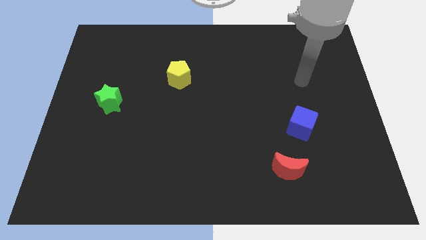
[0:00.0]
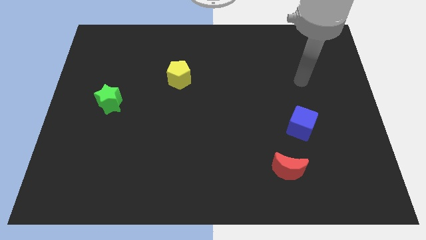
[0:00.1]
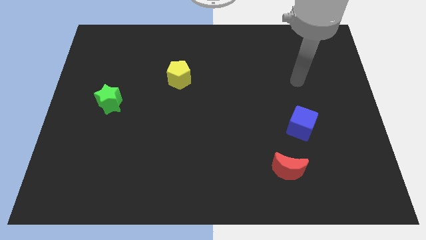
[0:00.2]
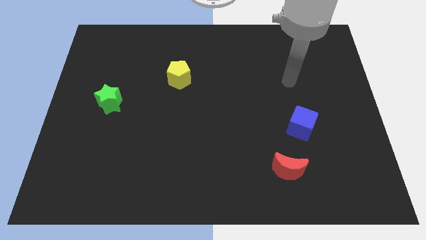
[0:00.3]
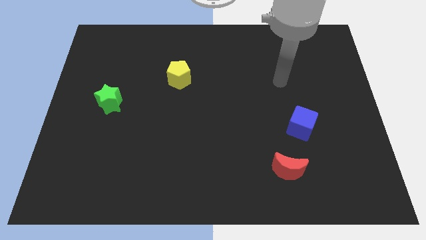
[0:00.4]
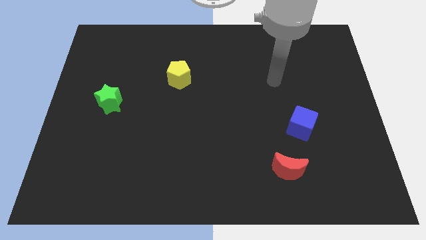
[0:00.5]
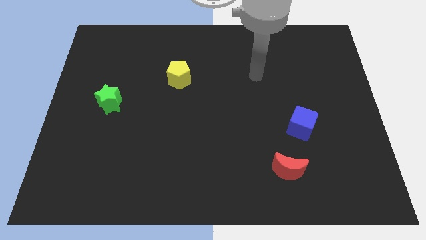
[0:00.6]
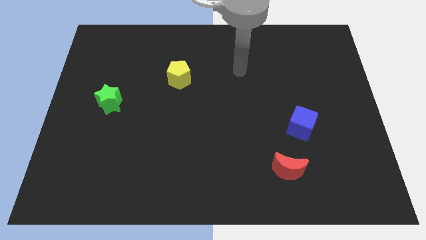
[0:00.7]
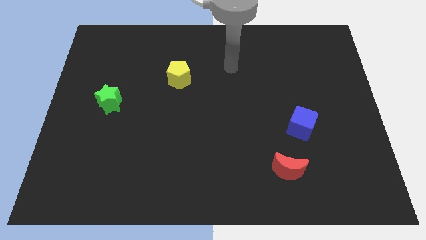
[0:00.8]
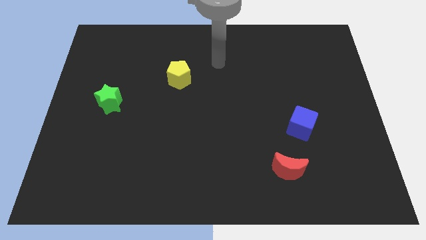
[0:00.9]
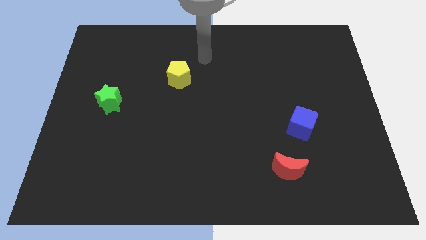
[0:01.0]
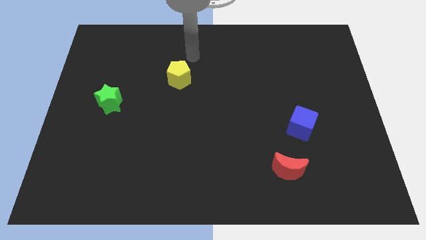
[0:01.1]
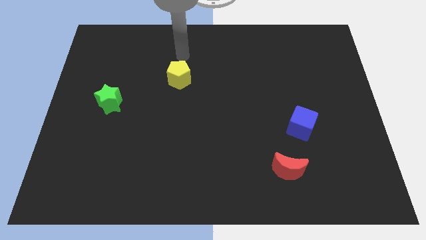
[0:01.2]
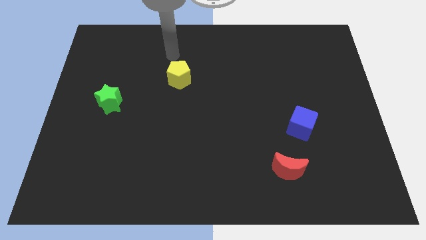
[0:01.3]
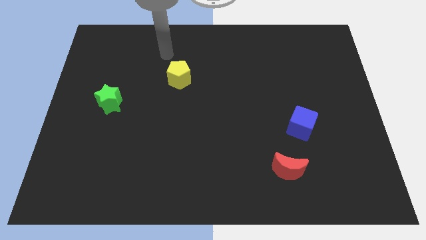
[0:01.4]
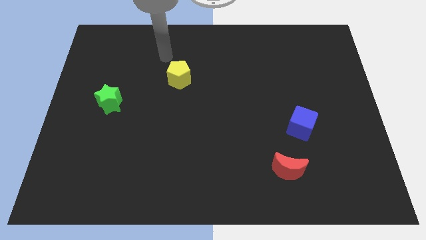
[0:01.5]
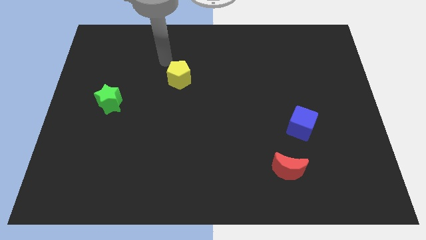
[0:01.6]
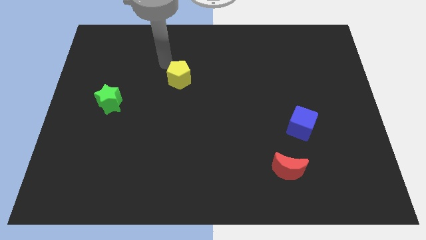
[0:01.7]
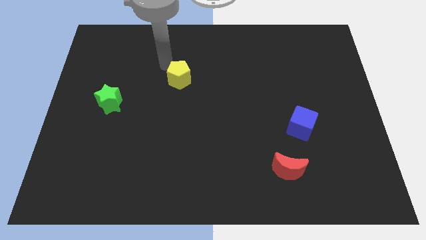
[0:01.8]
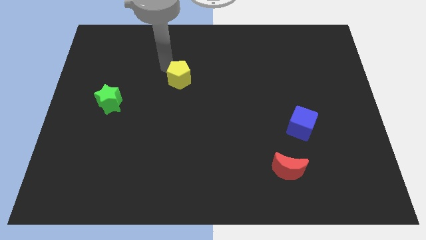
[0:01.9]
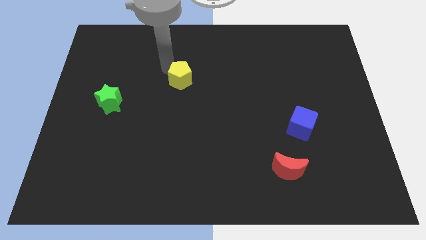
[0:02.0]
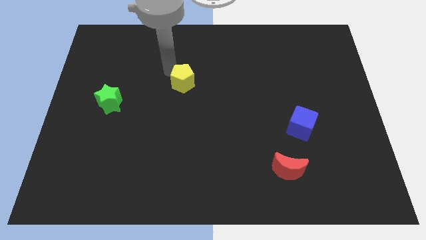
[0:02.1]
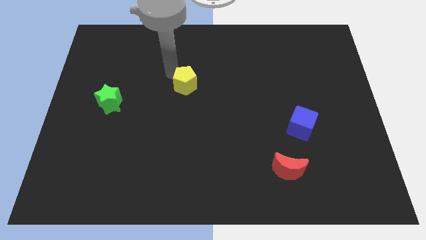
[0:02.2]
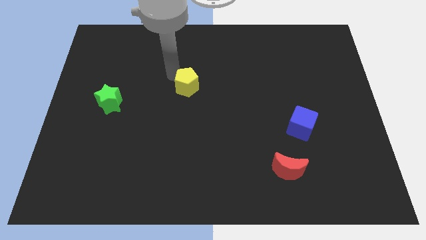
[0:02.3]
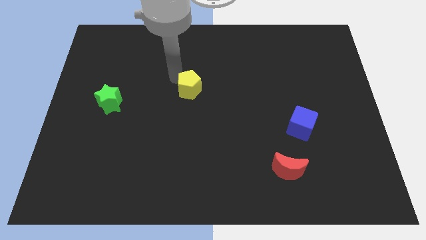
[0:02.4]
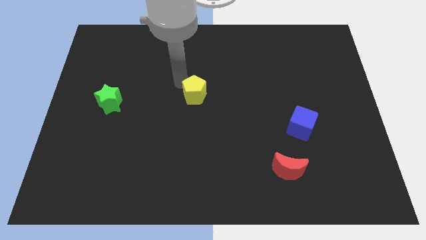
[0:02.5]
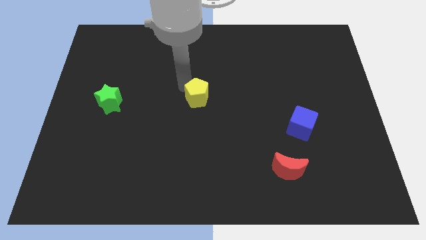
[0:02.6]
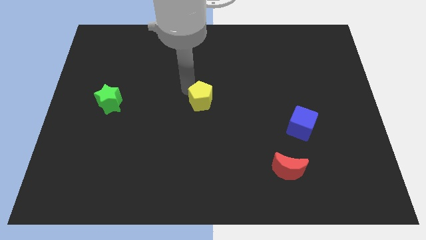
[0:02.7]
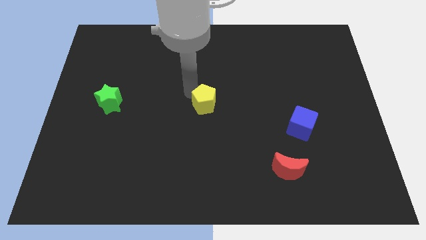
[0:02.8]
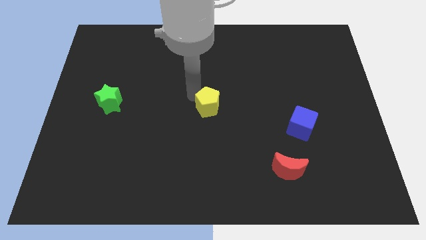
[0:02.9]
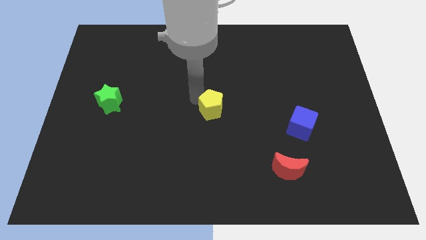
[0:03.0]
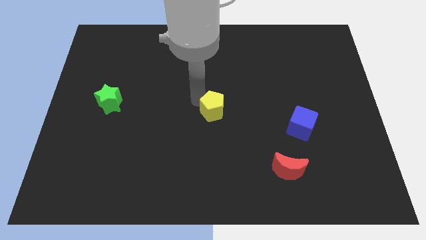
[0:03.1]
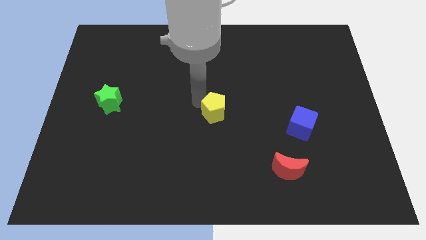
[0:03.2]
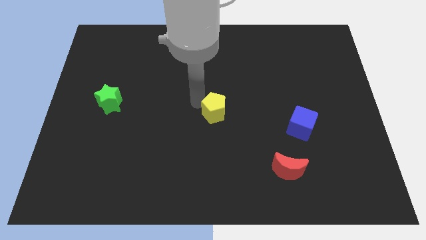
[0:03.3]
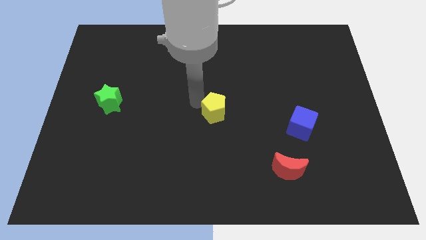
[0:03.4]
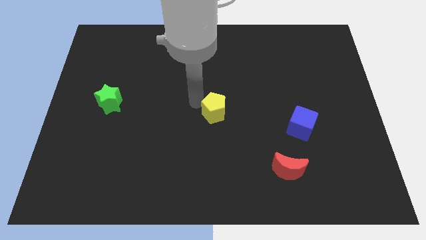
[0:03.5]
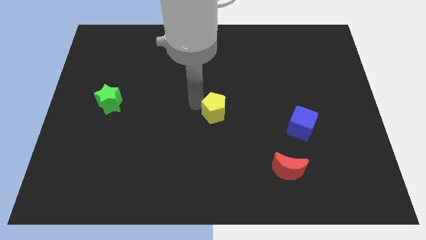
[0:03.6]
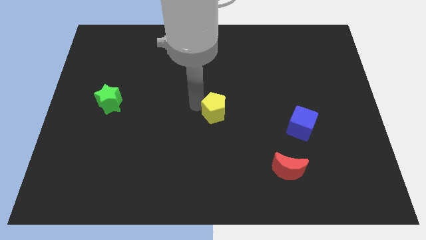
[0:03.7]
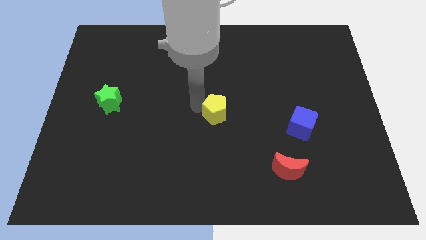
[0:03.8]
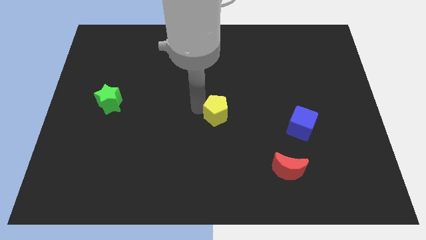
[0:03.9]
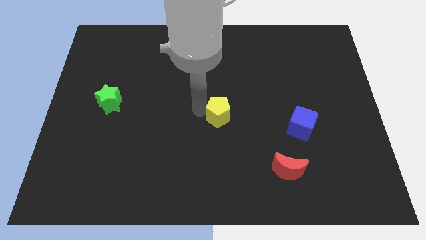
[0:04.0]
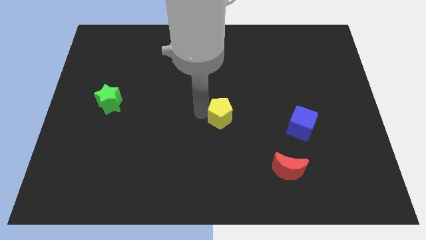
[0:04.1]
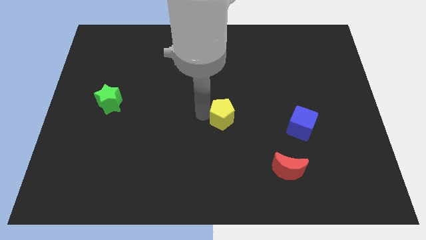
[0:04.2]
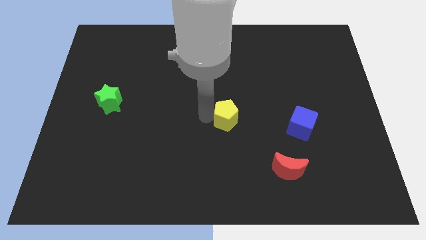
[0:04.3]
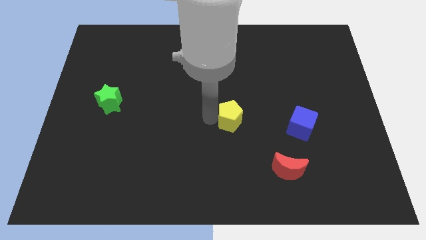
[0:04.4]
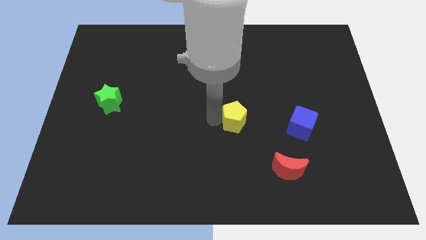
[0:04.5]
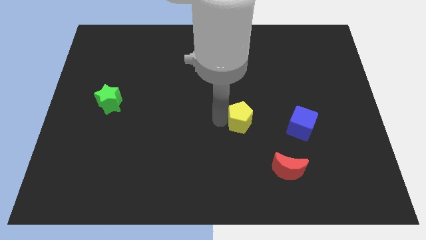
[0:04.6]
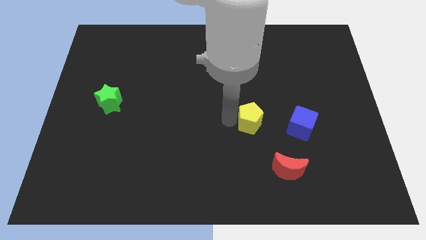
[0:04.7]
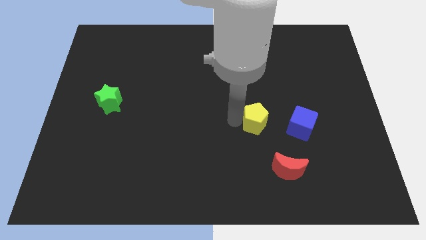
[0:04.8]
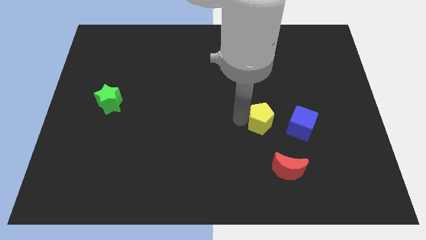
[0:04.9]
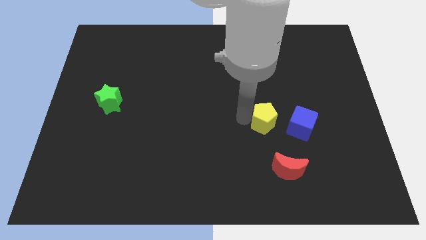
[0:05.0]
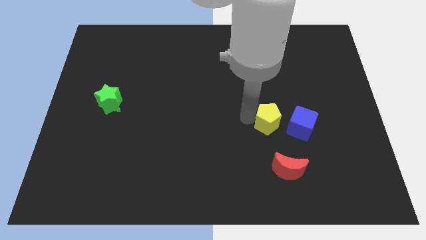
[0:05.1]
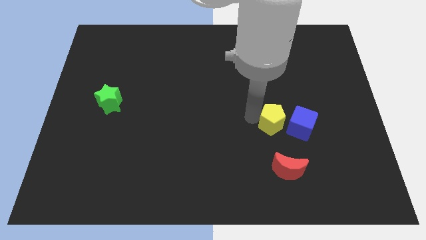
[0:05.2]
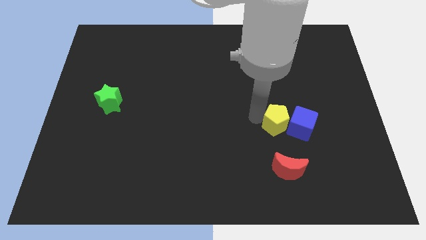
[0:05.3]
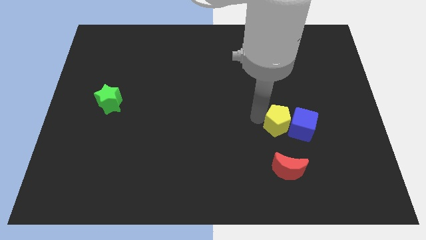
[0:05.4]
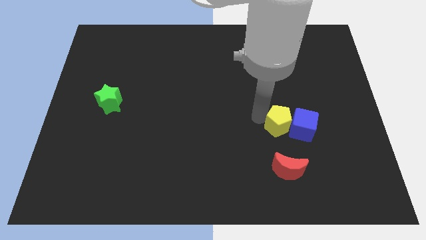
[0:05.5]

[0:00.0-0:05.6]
move the yellow block next to the cube

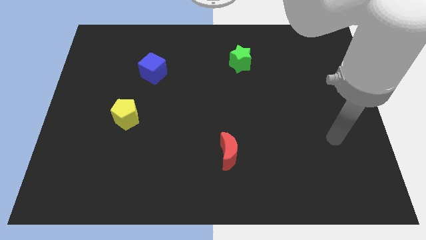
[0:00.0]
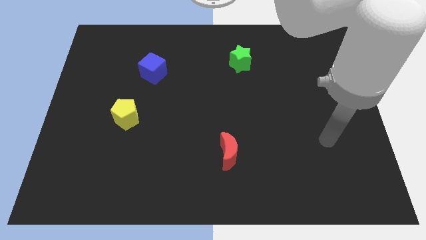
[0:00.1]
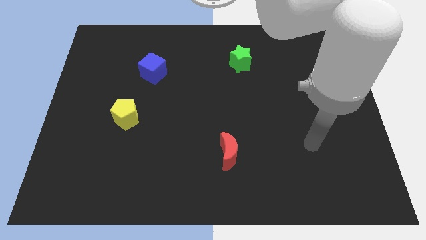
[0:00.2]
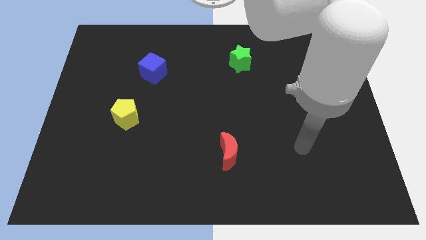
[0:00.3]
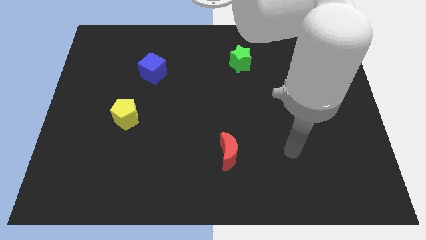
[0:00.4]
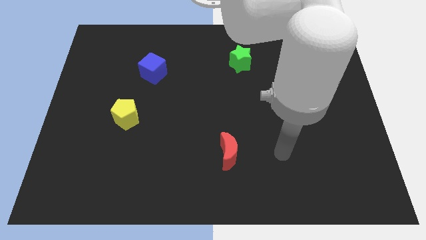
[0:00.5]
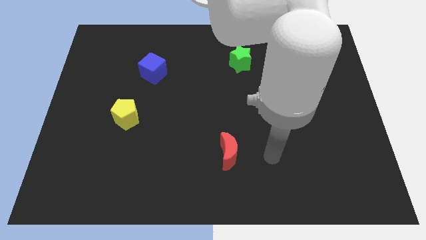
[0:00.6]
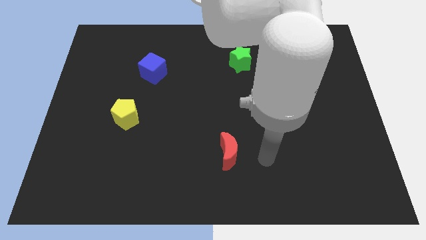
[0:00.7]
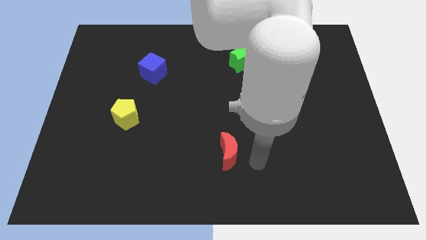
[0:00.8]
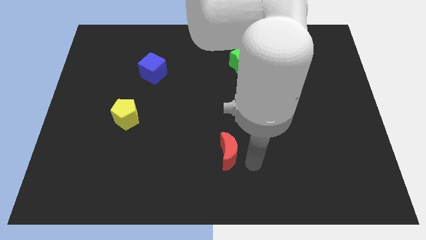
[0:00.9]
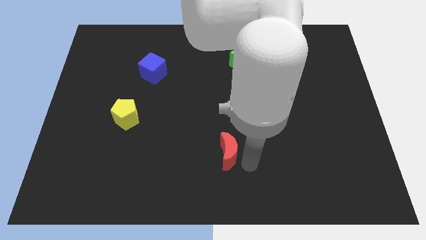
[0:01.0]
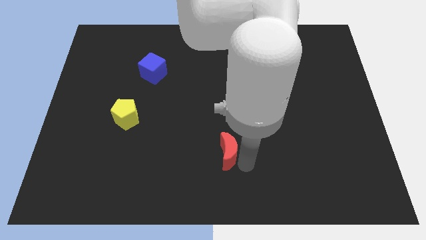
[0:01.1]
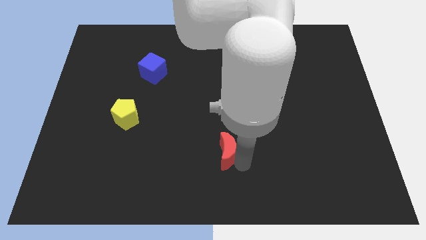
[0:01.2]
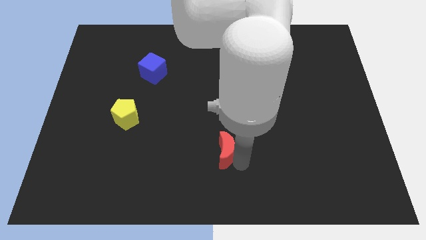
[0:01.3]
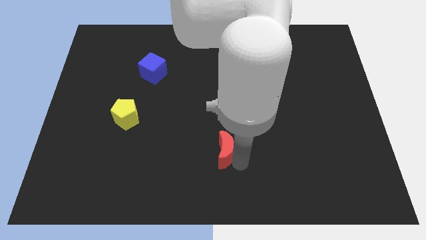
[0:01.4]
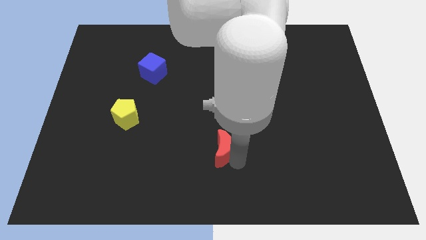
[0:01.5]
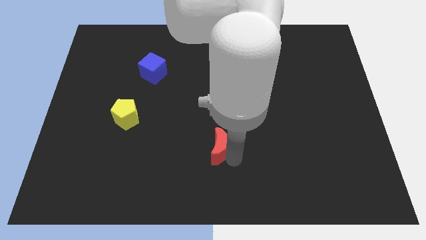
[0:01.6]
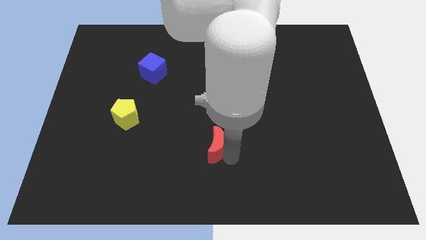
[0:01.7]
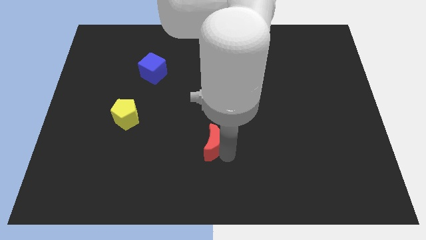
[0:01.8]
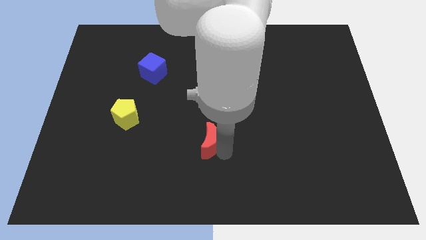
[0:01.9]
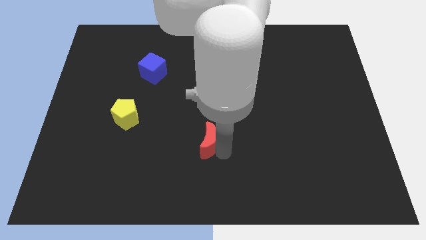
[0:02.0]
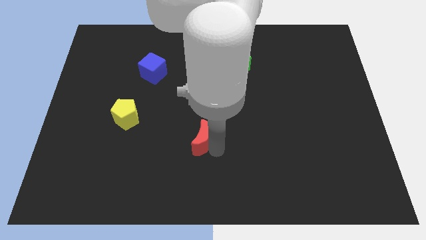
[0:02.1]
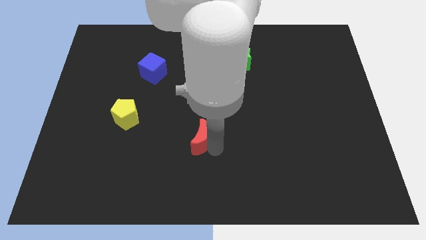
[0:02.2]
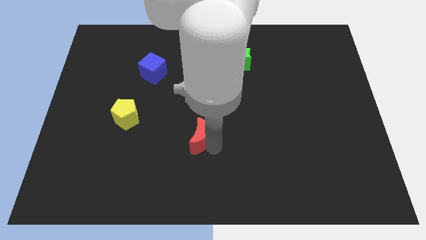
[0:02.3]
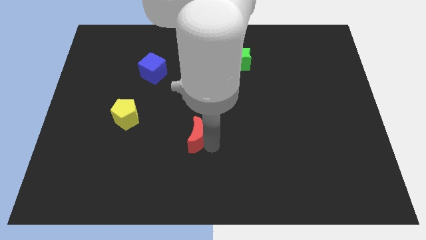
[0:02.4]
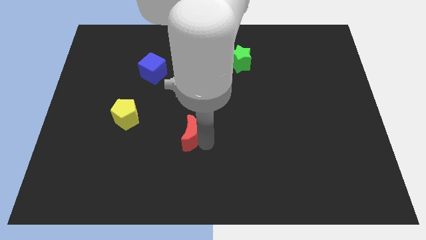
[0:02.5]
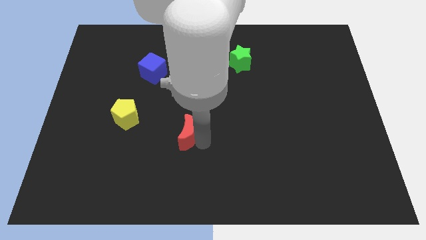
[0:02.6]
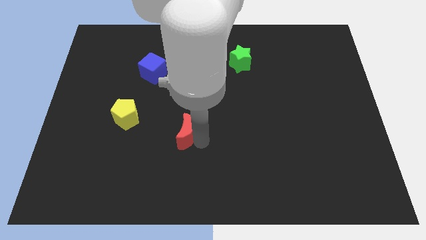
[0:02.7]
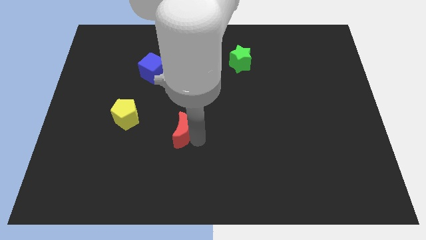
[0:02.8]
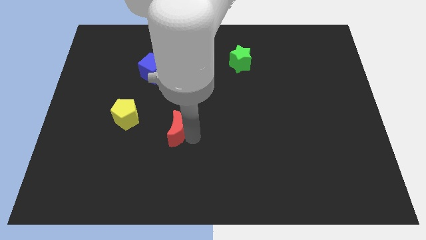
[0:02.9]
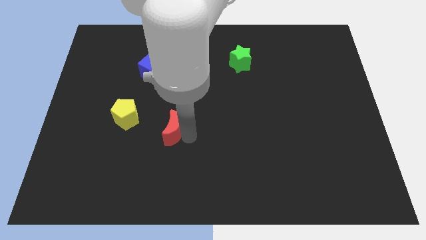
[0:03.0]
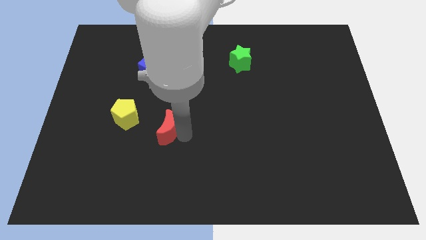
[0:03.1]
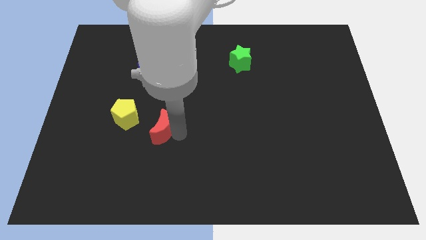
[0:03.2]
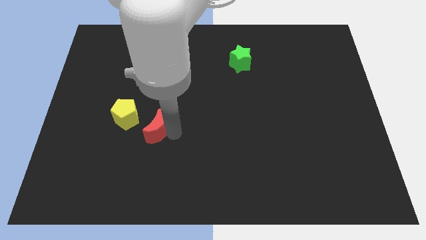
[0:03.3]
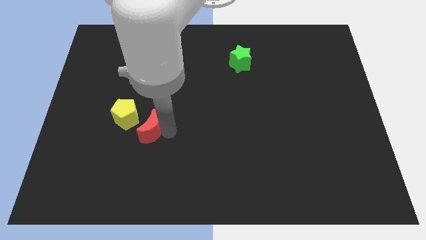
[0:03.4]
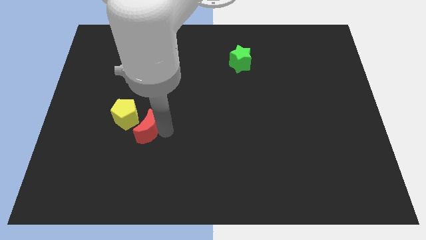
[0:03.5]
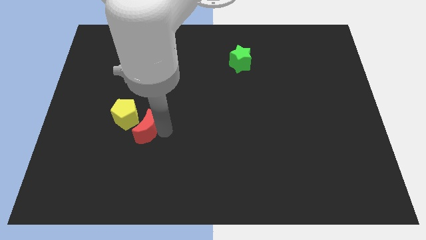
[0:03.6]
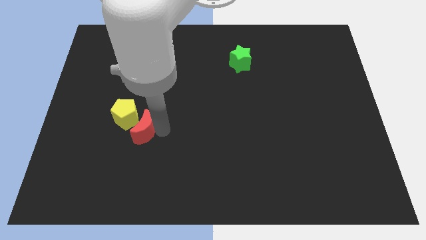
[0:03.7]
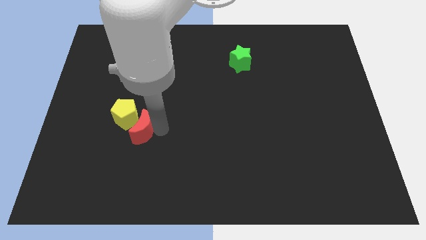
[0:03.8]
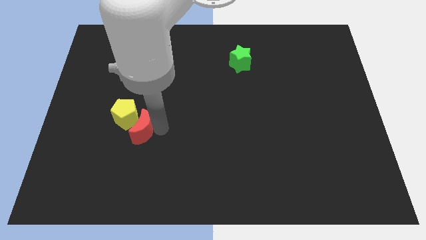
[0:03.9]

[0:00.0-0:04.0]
slide the moon close to the yellow block
